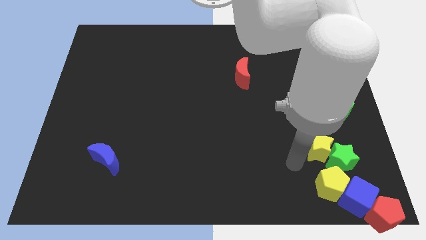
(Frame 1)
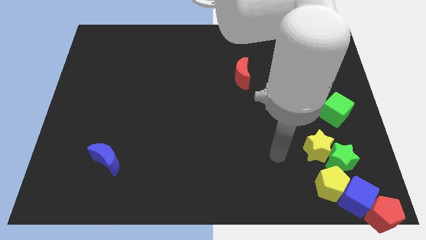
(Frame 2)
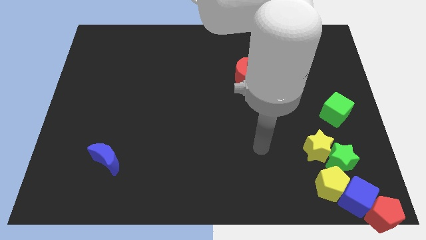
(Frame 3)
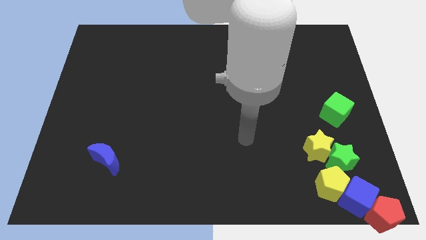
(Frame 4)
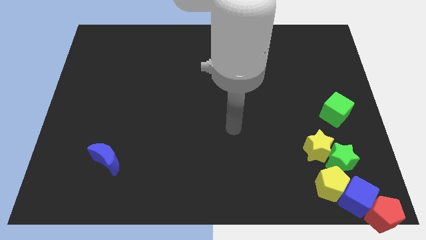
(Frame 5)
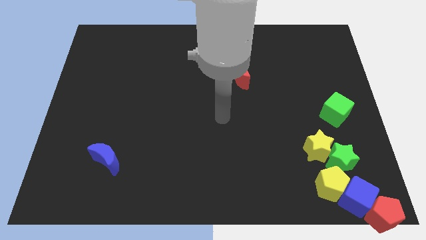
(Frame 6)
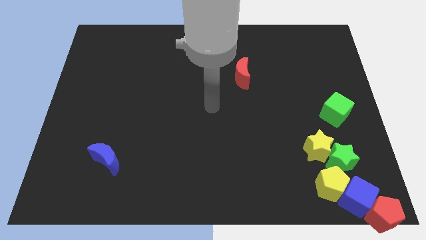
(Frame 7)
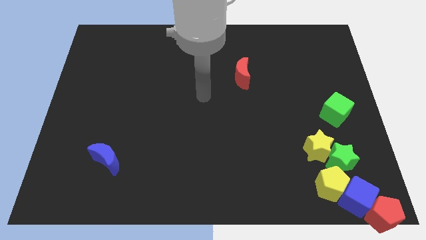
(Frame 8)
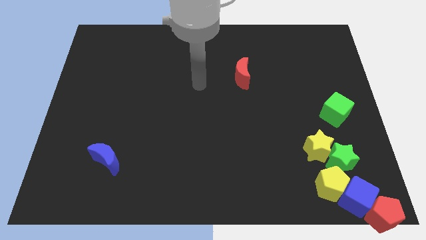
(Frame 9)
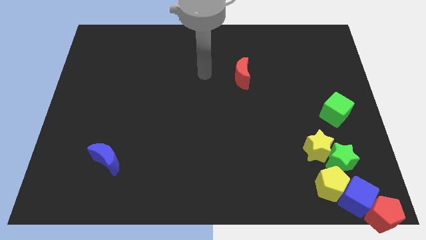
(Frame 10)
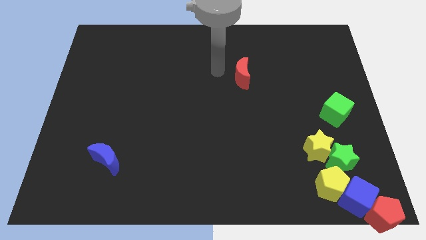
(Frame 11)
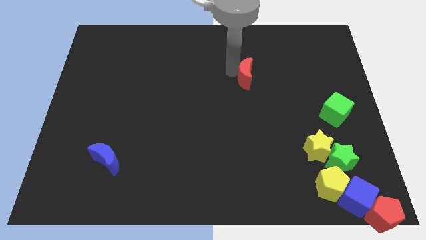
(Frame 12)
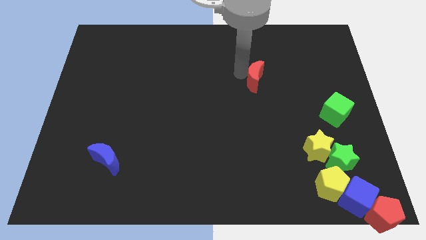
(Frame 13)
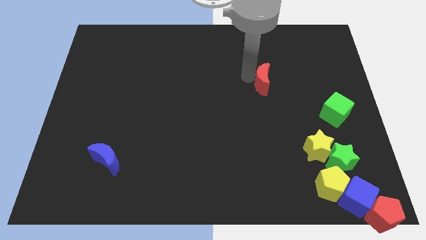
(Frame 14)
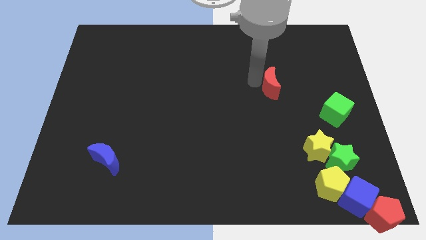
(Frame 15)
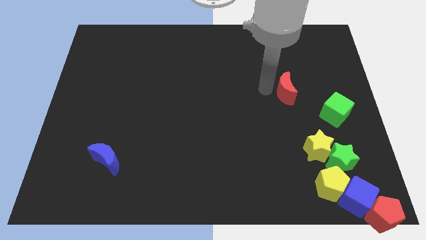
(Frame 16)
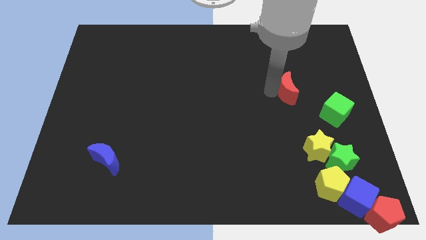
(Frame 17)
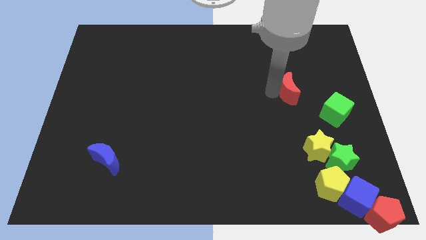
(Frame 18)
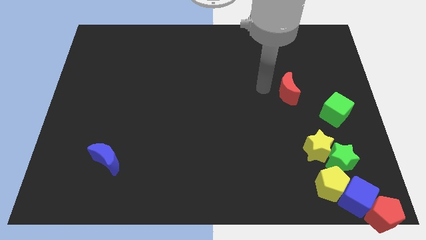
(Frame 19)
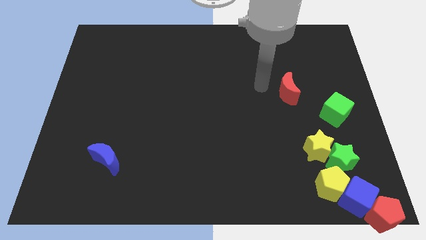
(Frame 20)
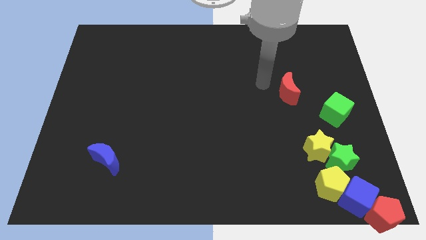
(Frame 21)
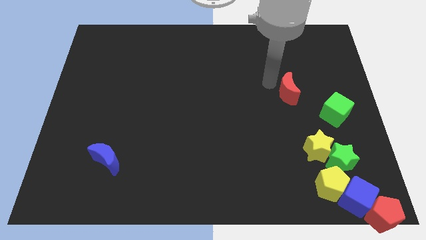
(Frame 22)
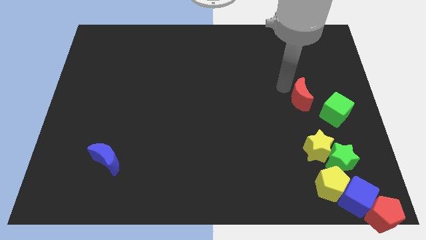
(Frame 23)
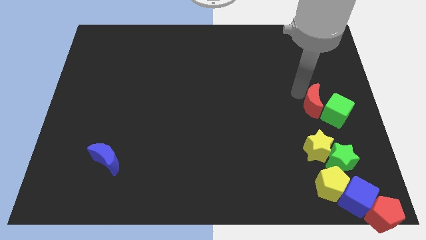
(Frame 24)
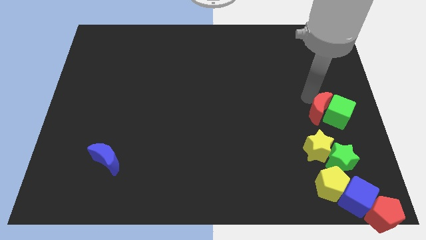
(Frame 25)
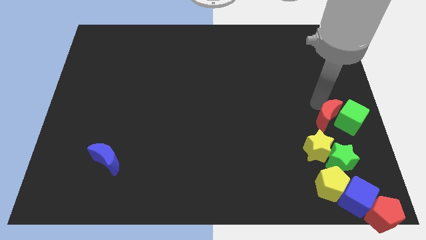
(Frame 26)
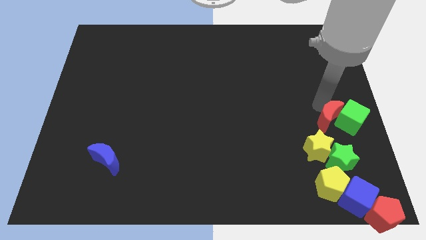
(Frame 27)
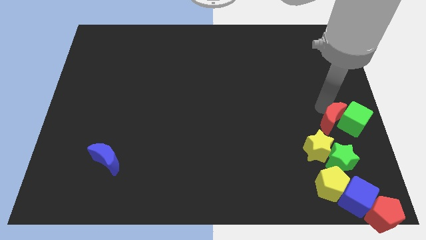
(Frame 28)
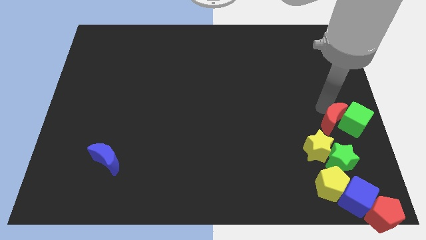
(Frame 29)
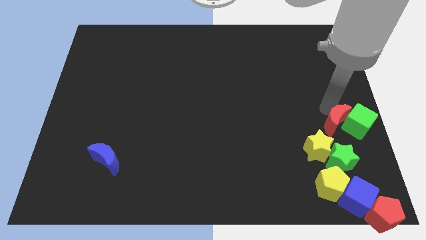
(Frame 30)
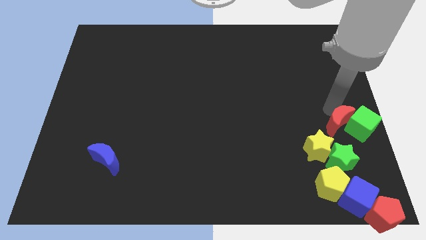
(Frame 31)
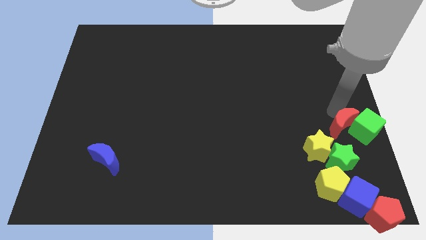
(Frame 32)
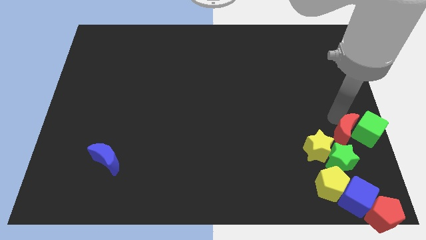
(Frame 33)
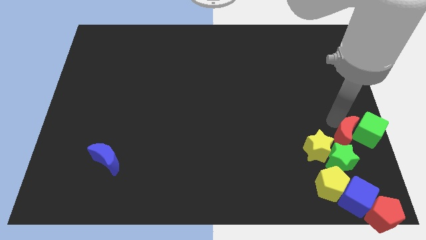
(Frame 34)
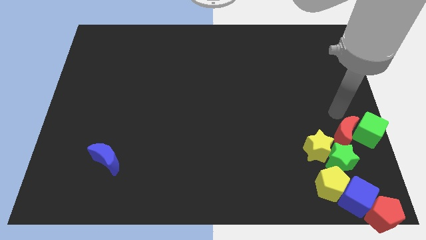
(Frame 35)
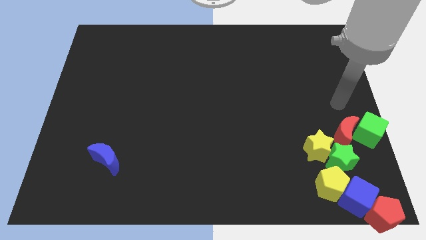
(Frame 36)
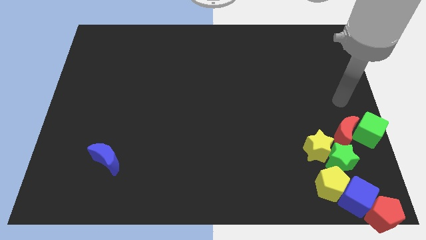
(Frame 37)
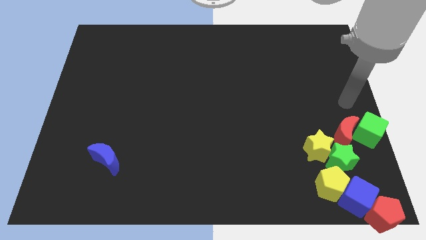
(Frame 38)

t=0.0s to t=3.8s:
move red crescent into green cube

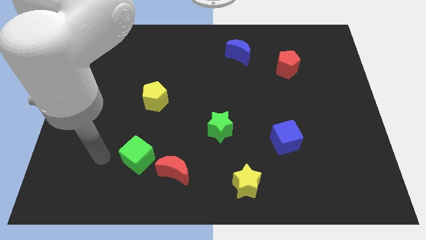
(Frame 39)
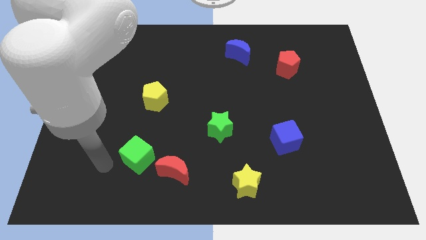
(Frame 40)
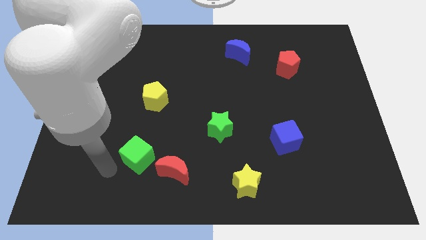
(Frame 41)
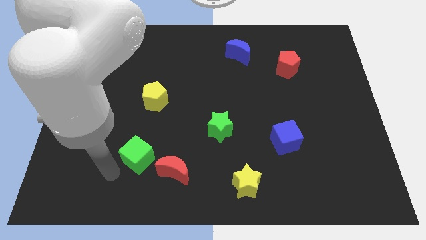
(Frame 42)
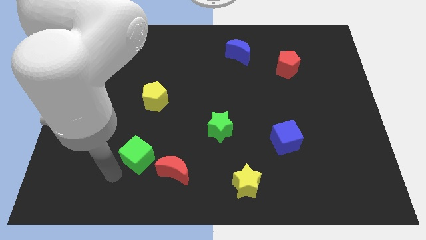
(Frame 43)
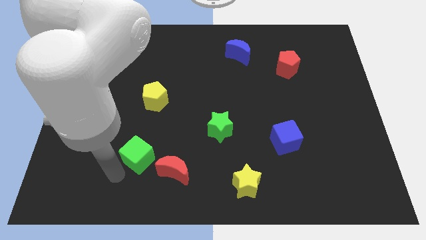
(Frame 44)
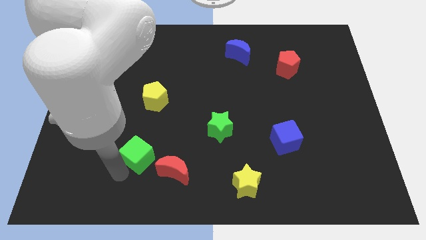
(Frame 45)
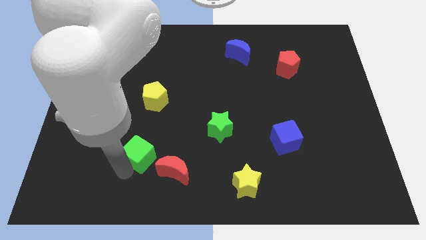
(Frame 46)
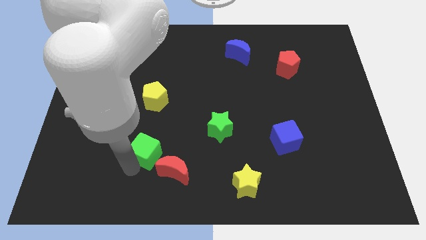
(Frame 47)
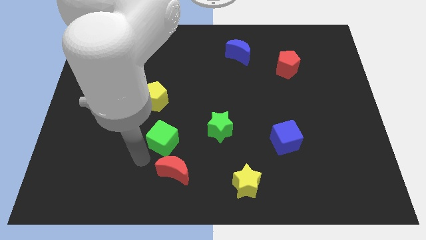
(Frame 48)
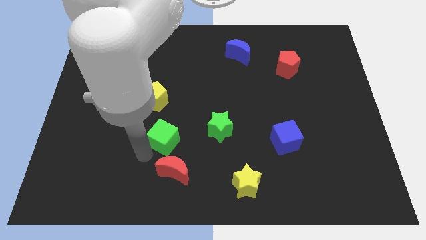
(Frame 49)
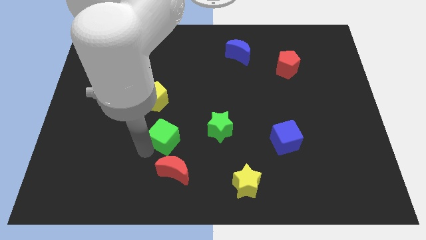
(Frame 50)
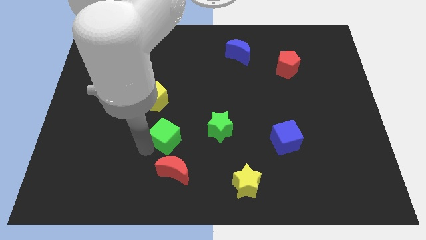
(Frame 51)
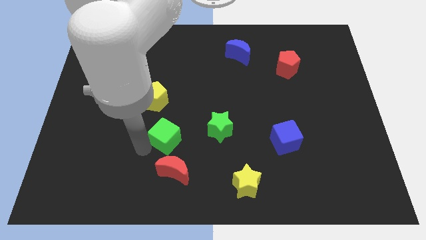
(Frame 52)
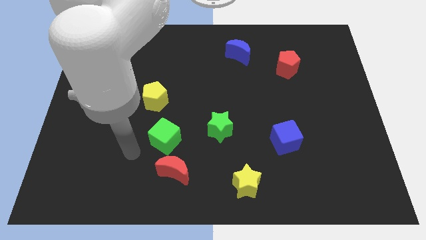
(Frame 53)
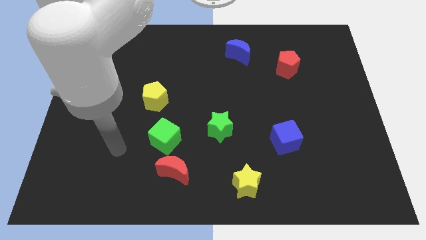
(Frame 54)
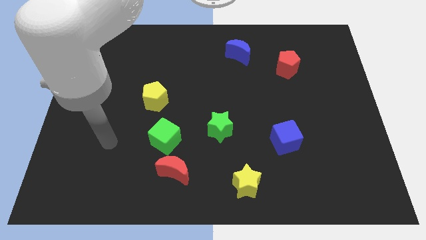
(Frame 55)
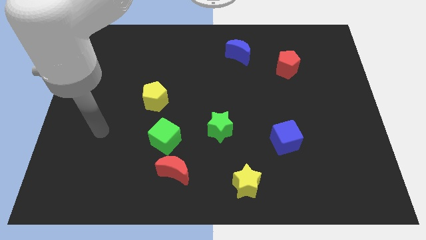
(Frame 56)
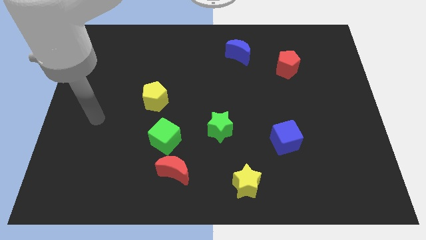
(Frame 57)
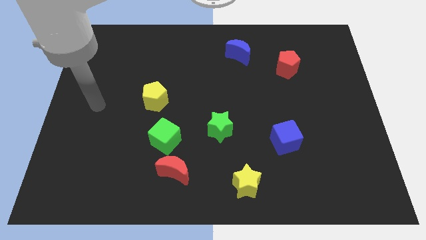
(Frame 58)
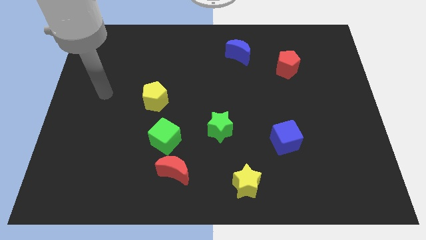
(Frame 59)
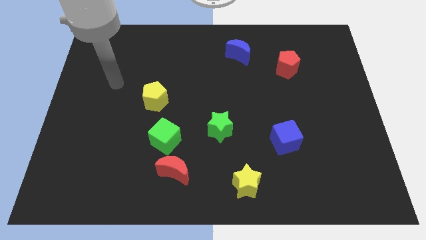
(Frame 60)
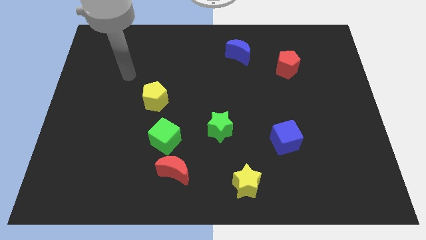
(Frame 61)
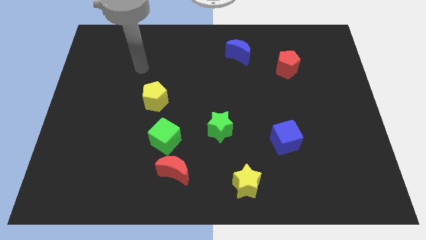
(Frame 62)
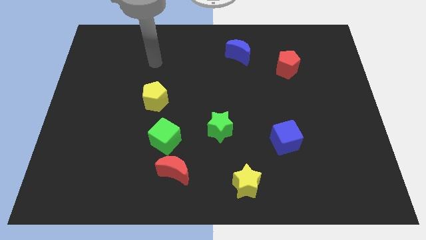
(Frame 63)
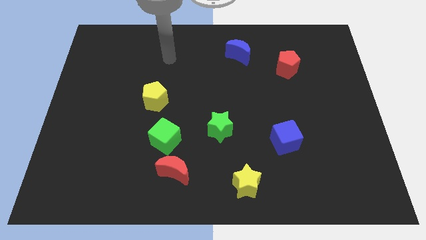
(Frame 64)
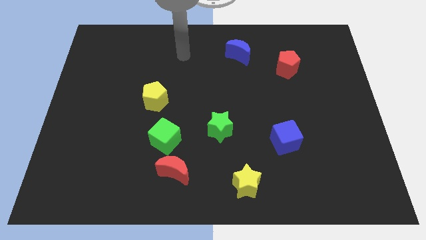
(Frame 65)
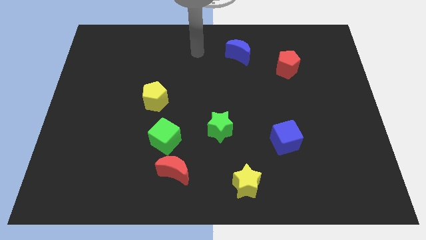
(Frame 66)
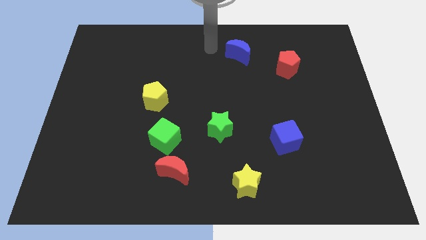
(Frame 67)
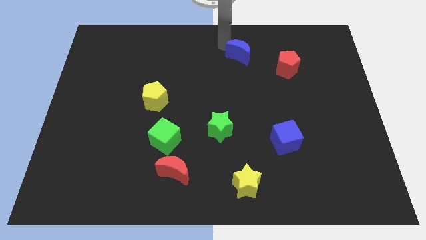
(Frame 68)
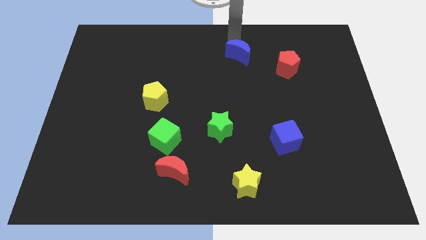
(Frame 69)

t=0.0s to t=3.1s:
place the green cube above the red moon

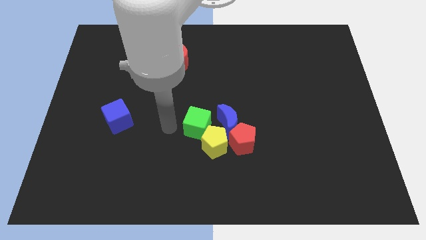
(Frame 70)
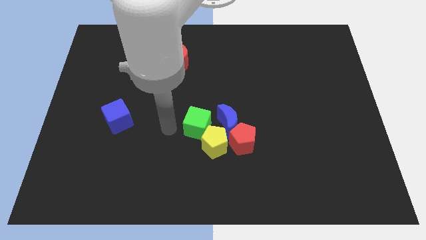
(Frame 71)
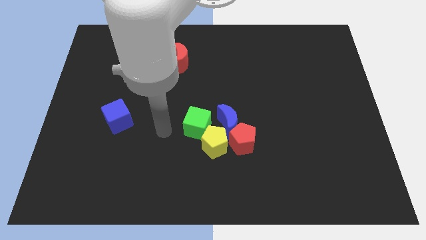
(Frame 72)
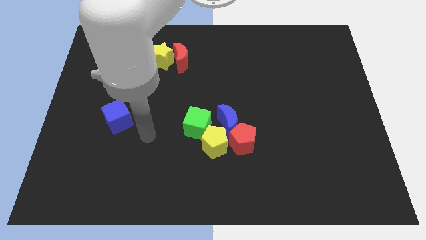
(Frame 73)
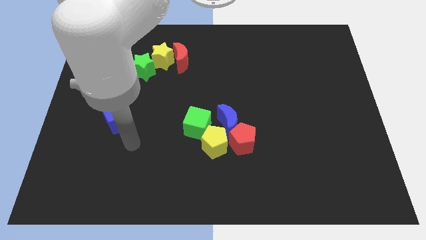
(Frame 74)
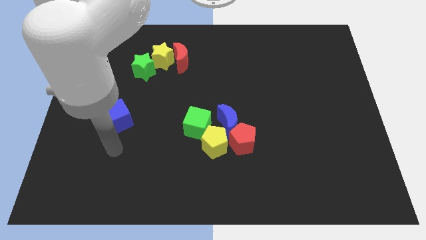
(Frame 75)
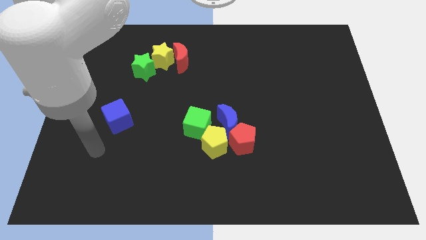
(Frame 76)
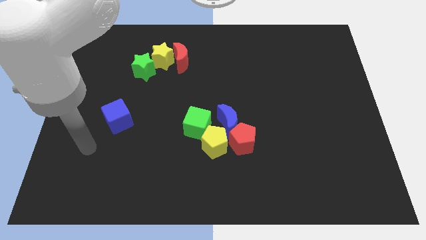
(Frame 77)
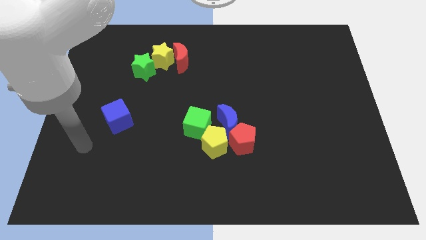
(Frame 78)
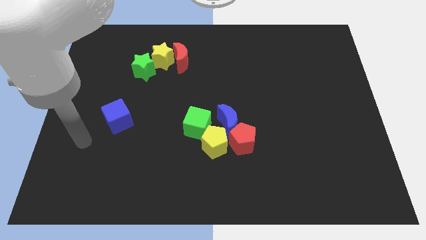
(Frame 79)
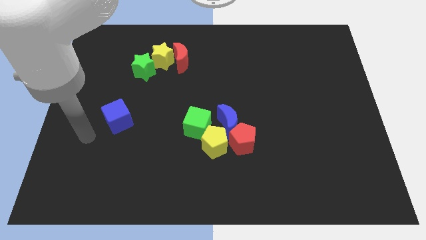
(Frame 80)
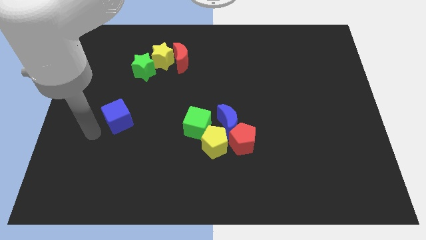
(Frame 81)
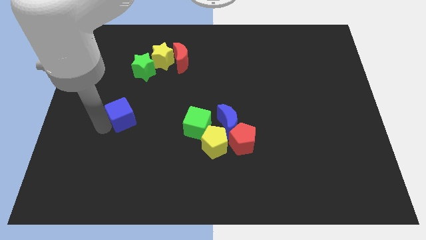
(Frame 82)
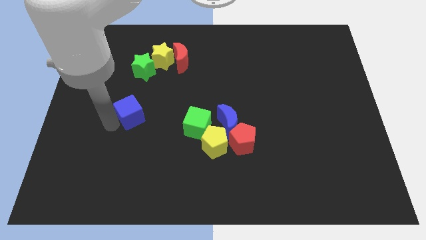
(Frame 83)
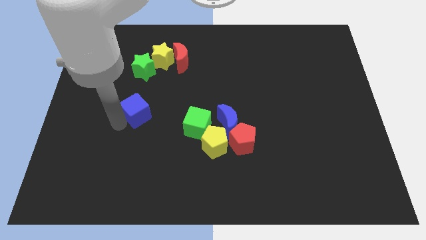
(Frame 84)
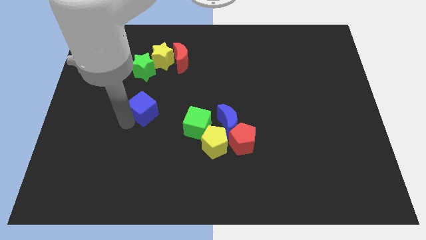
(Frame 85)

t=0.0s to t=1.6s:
put the blue cube vertically below the green star

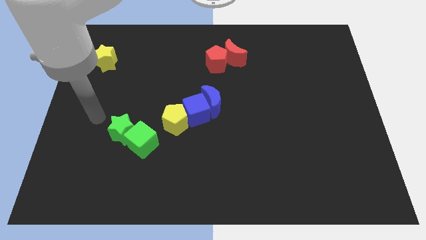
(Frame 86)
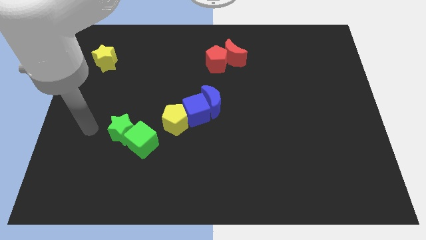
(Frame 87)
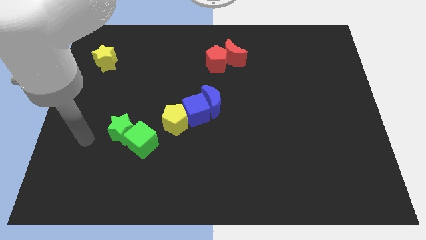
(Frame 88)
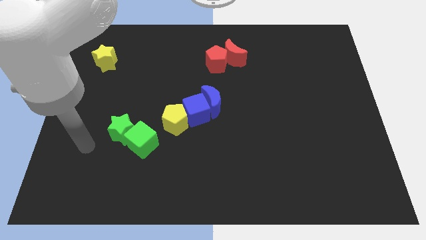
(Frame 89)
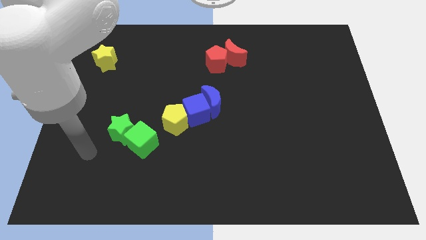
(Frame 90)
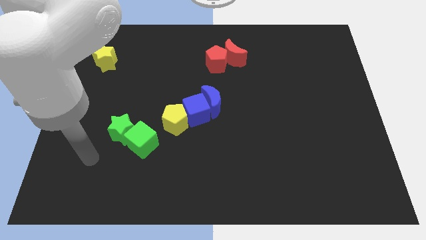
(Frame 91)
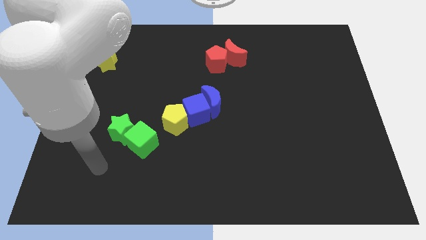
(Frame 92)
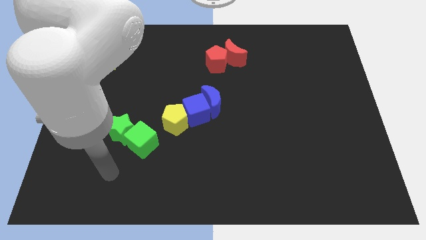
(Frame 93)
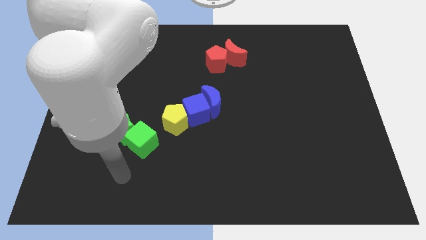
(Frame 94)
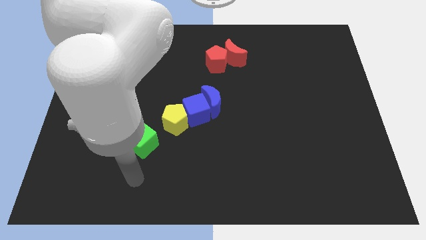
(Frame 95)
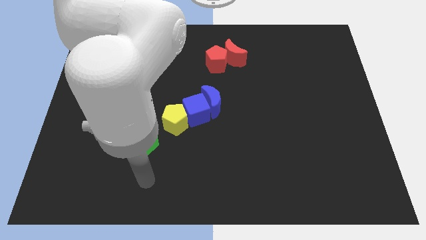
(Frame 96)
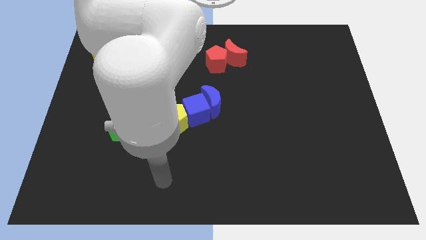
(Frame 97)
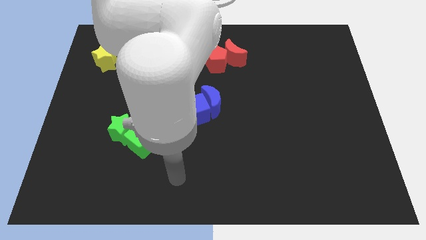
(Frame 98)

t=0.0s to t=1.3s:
move your hand to the bottom of the green cube
